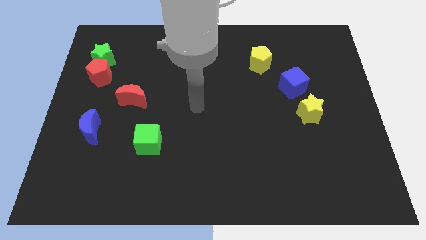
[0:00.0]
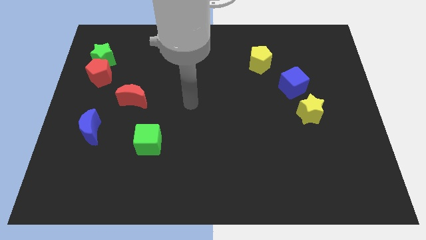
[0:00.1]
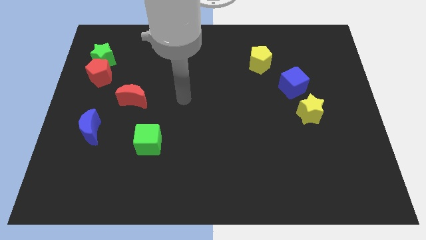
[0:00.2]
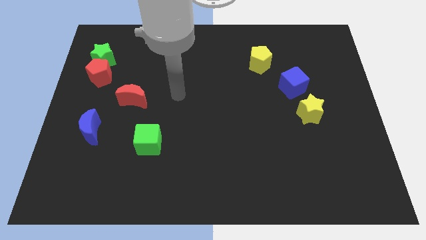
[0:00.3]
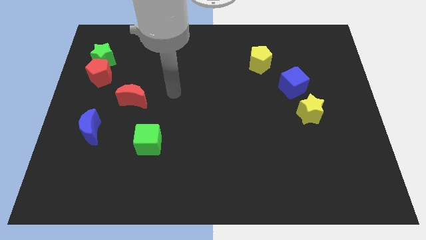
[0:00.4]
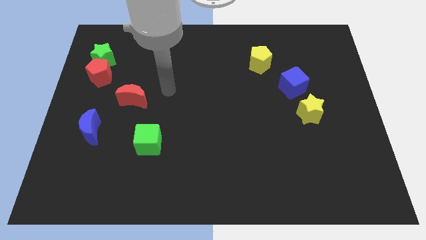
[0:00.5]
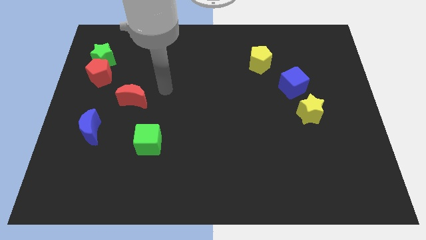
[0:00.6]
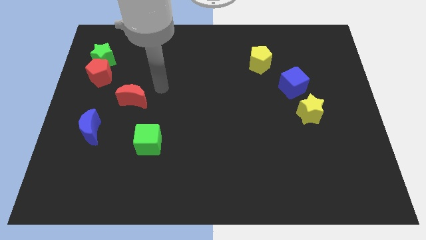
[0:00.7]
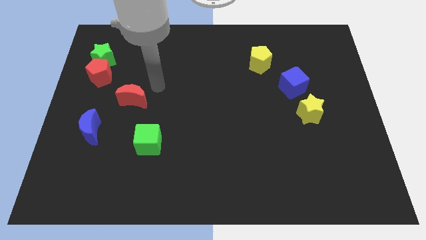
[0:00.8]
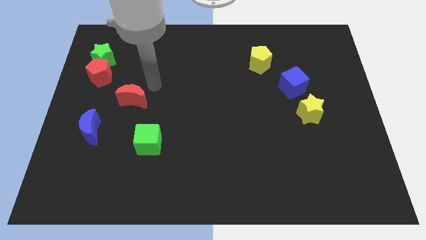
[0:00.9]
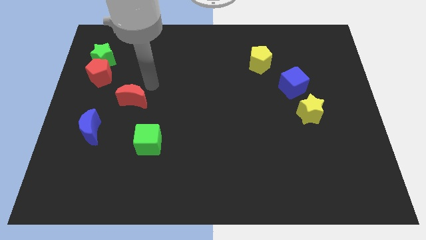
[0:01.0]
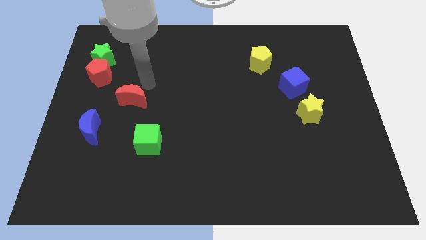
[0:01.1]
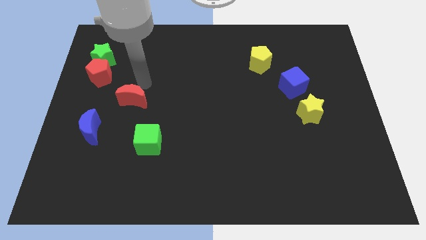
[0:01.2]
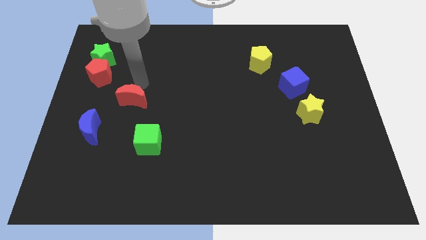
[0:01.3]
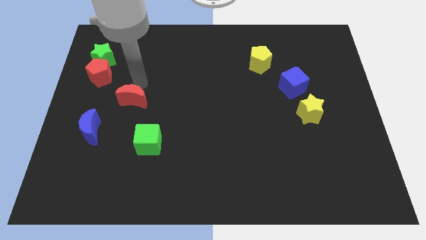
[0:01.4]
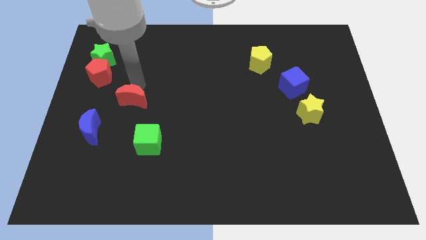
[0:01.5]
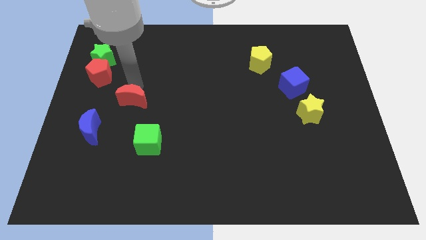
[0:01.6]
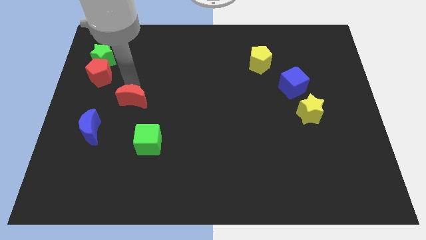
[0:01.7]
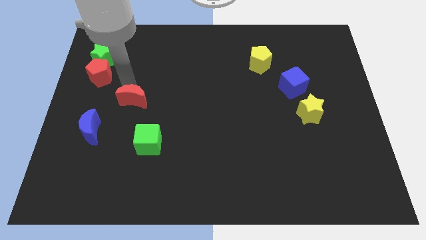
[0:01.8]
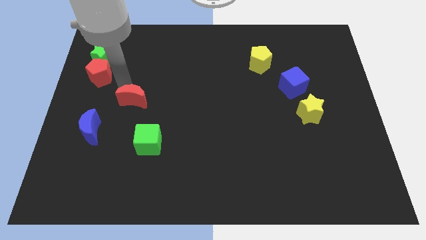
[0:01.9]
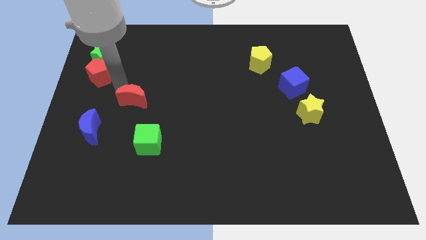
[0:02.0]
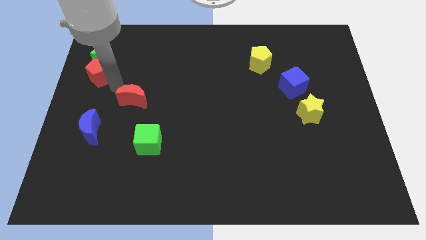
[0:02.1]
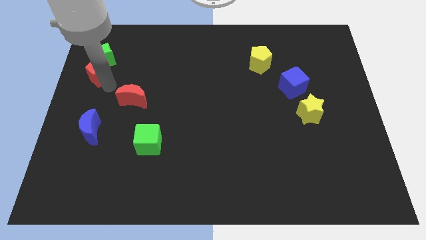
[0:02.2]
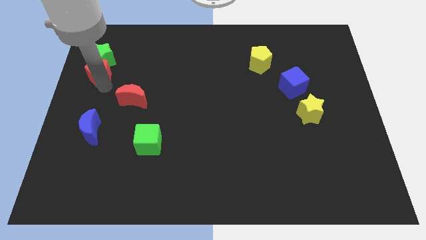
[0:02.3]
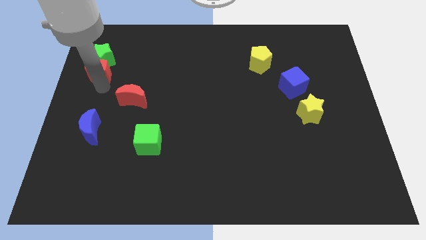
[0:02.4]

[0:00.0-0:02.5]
move your arm to the bottom of the red pentagon

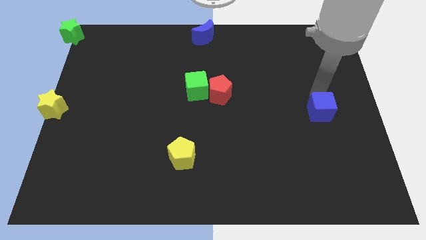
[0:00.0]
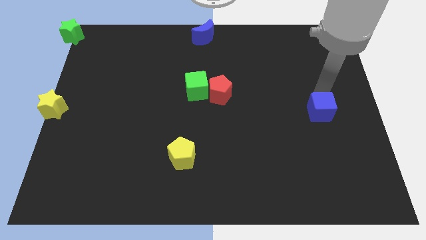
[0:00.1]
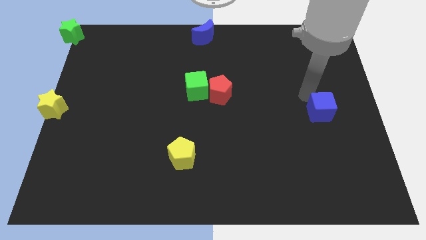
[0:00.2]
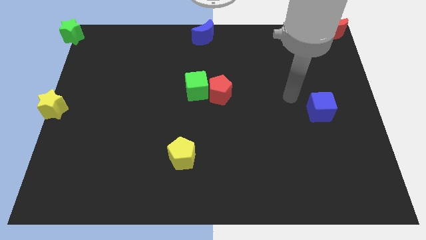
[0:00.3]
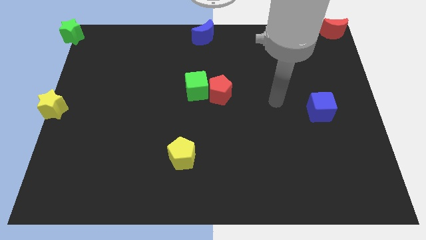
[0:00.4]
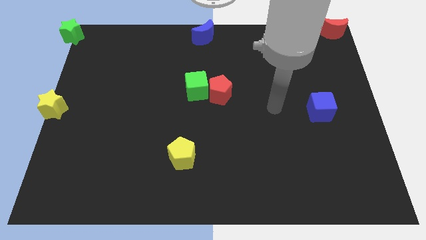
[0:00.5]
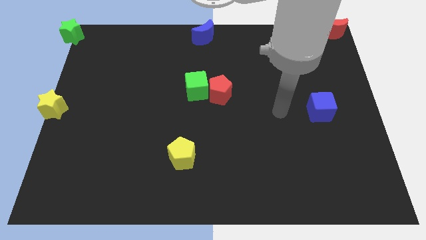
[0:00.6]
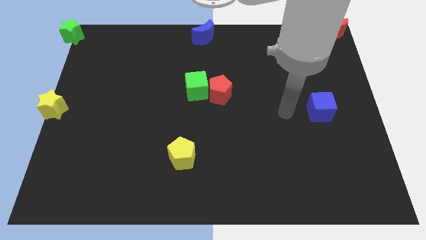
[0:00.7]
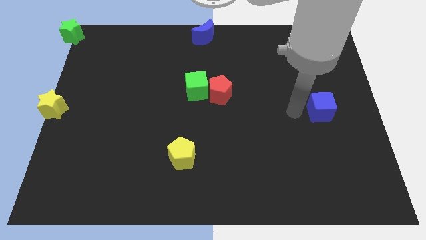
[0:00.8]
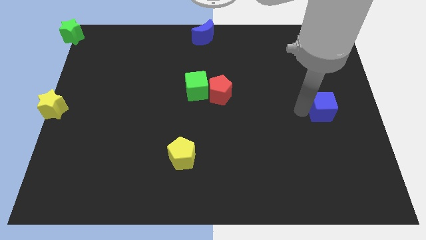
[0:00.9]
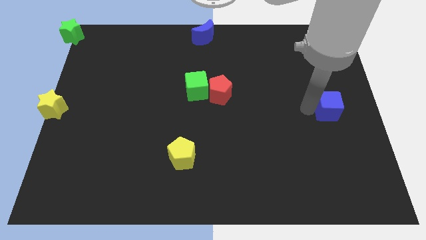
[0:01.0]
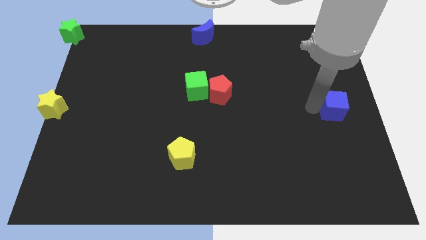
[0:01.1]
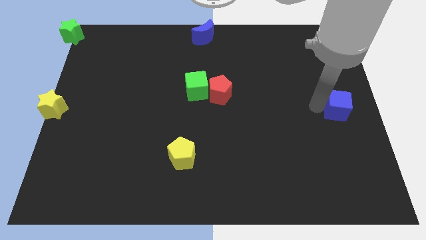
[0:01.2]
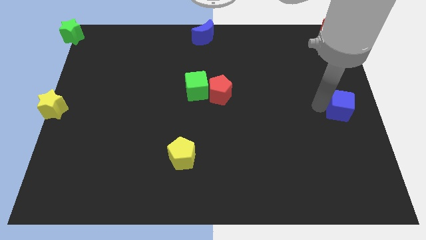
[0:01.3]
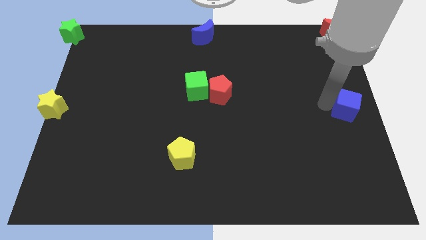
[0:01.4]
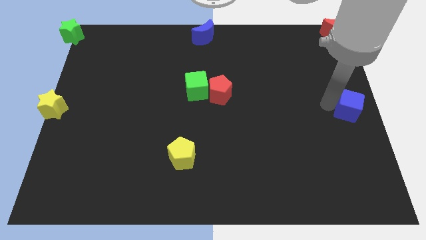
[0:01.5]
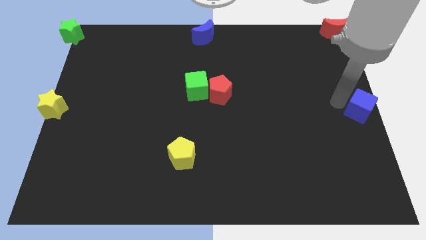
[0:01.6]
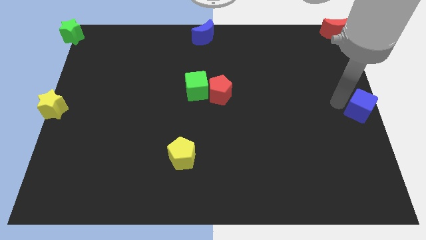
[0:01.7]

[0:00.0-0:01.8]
move the blue cube to the center right of the board

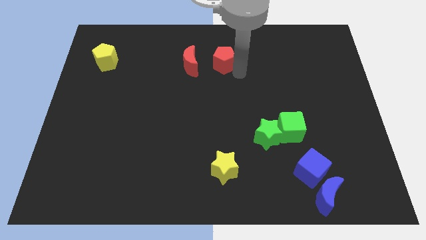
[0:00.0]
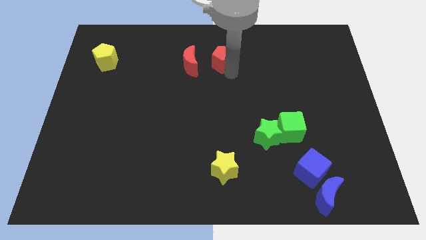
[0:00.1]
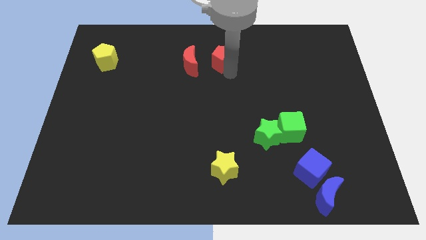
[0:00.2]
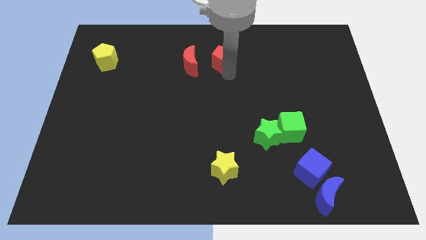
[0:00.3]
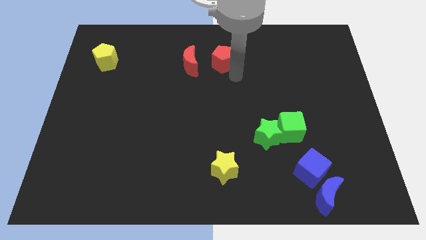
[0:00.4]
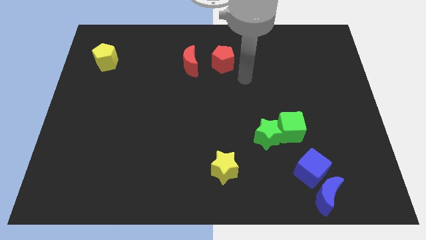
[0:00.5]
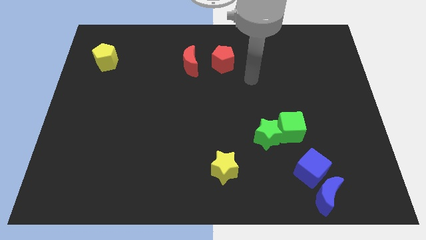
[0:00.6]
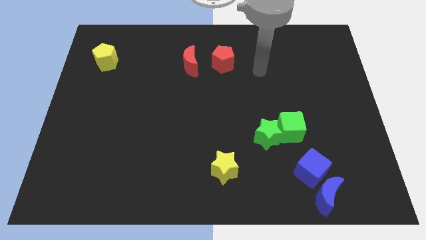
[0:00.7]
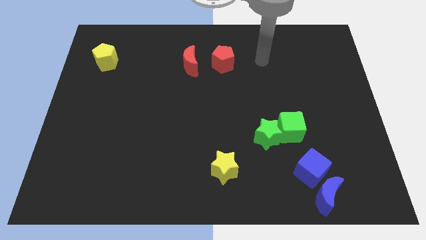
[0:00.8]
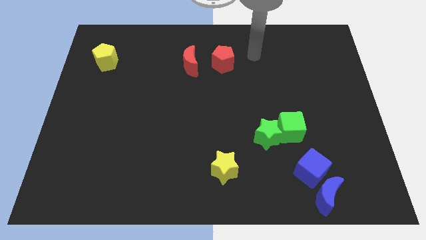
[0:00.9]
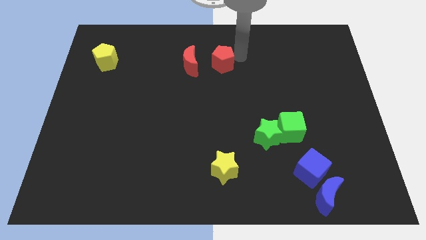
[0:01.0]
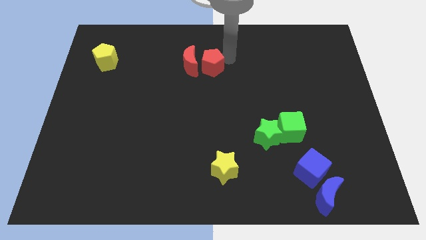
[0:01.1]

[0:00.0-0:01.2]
slide the red pentagon close to the red moon

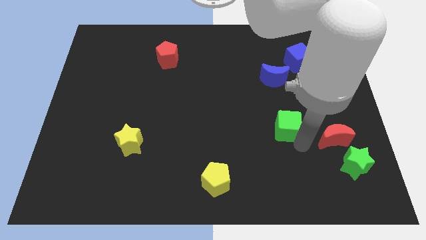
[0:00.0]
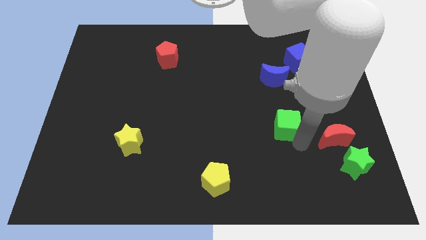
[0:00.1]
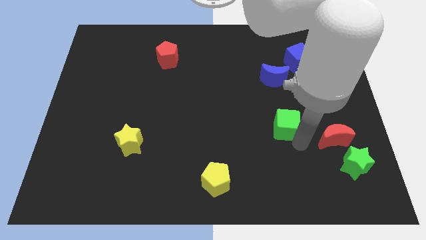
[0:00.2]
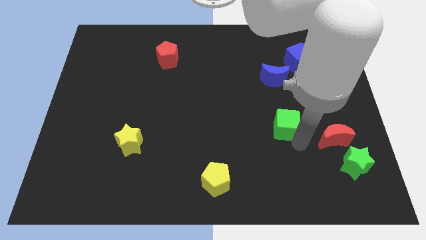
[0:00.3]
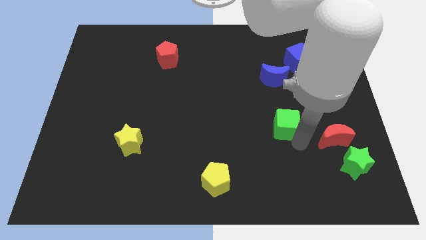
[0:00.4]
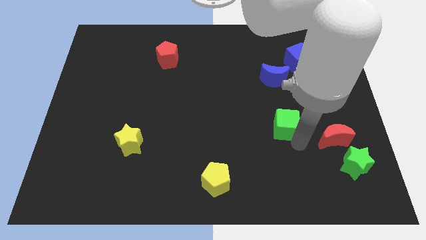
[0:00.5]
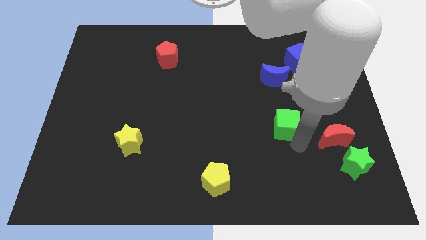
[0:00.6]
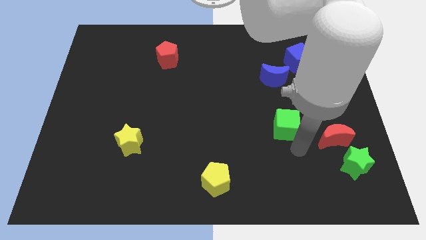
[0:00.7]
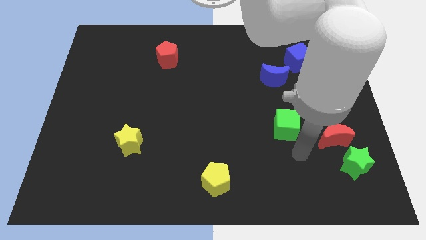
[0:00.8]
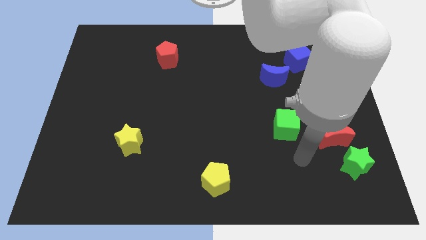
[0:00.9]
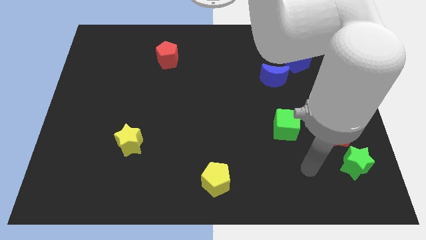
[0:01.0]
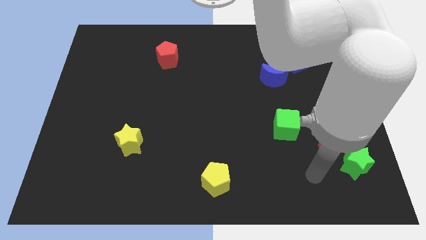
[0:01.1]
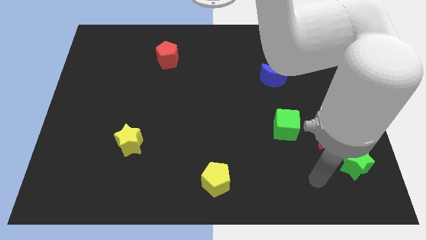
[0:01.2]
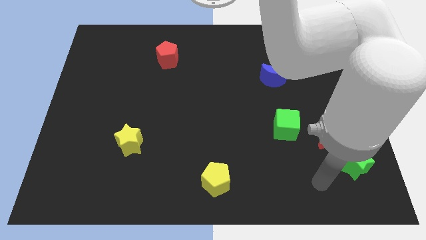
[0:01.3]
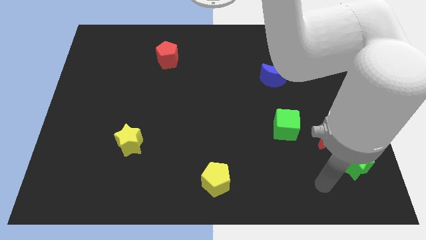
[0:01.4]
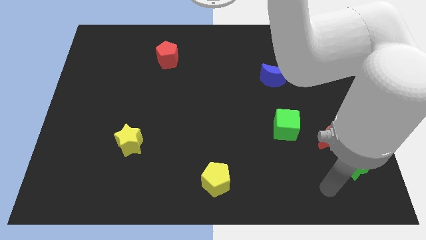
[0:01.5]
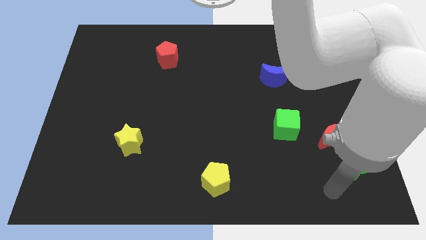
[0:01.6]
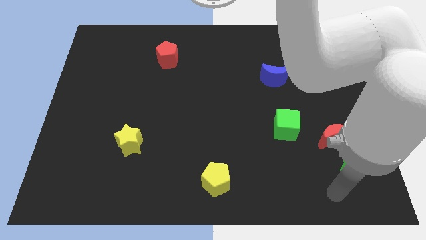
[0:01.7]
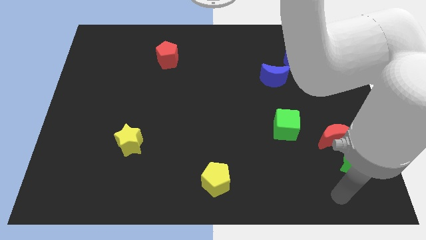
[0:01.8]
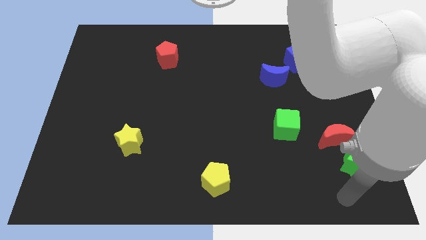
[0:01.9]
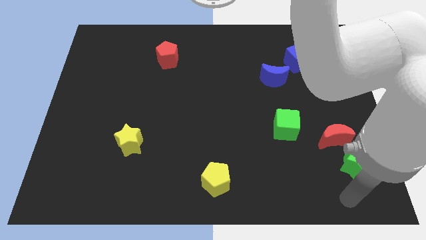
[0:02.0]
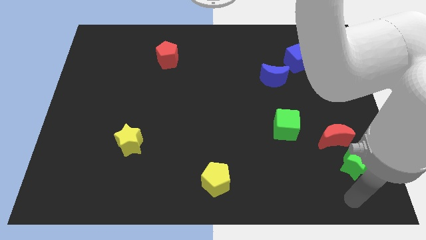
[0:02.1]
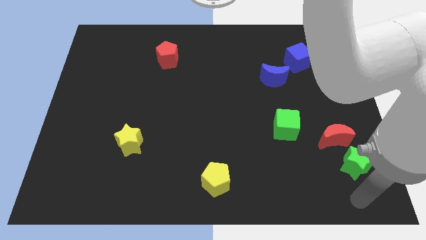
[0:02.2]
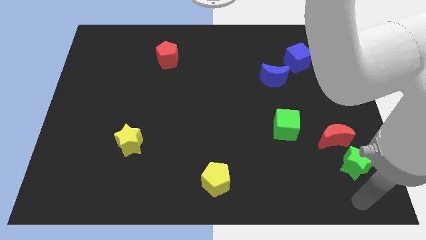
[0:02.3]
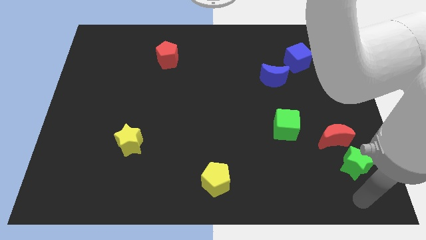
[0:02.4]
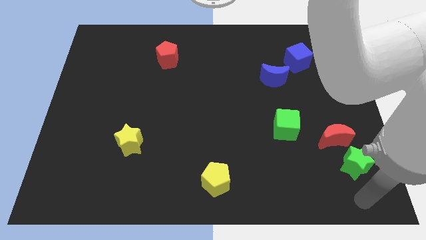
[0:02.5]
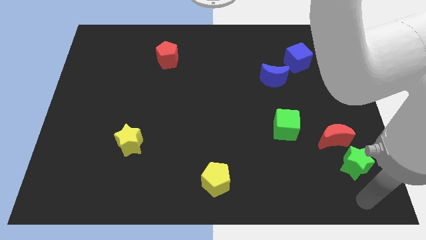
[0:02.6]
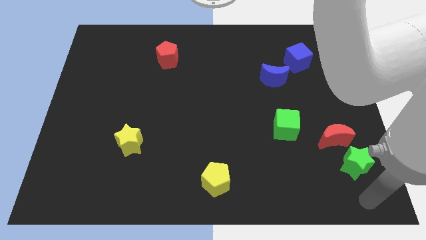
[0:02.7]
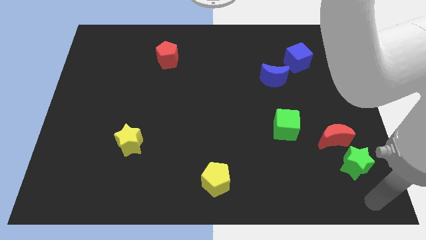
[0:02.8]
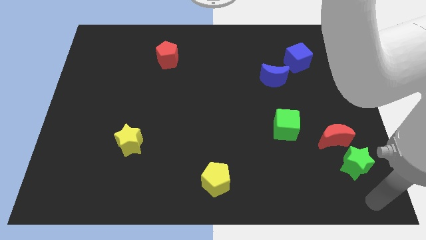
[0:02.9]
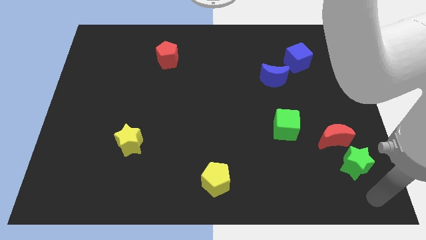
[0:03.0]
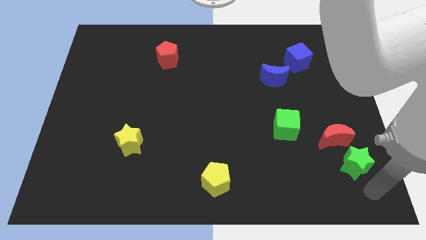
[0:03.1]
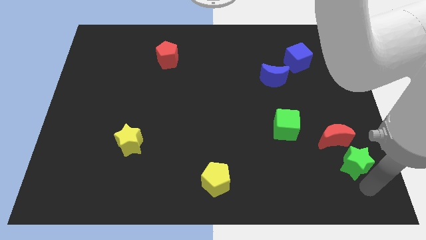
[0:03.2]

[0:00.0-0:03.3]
move your hand towards the bottom of the green star
